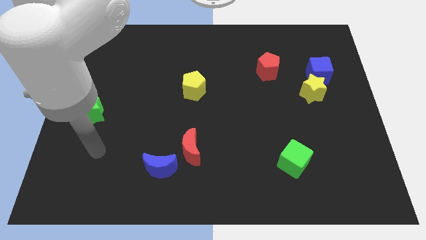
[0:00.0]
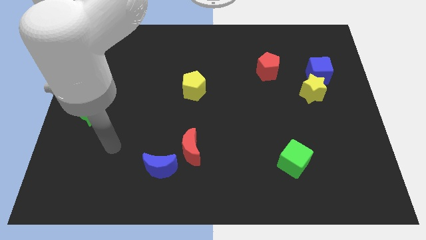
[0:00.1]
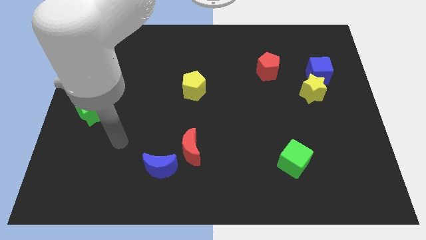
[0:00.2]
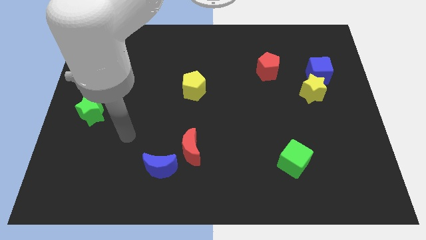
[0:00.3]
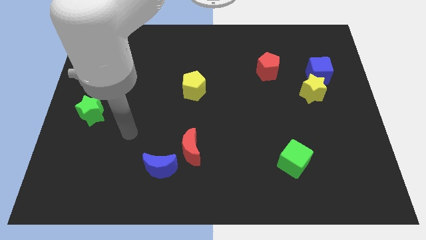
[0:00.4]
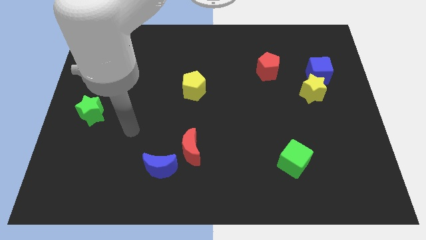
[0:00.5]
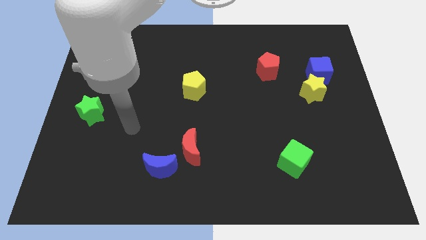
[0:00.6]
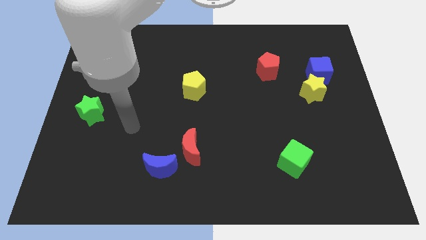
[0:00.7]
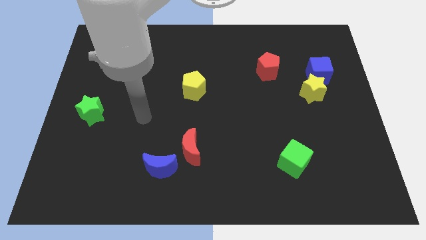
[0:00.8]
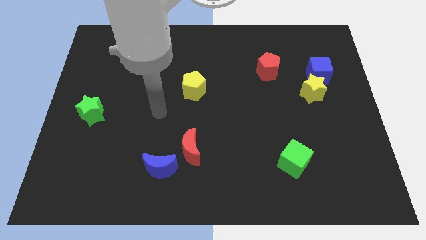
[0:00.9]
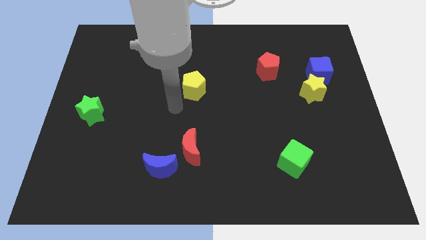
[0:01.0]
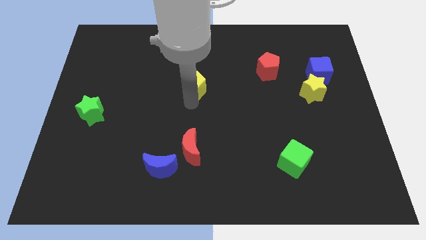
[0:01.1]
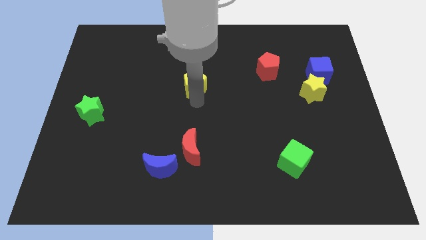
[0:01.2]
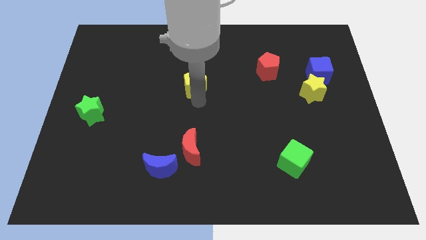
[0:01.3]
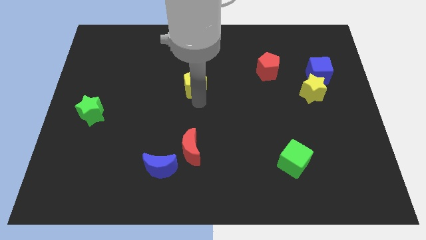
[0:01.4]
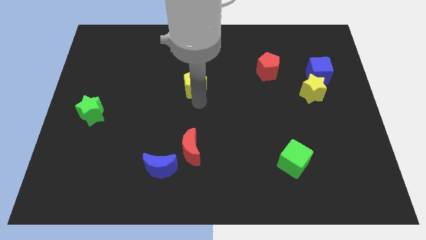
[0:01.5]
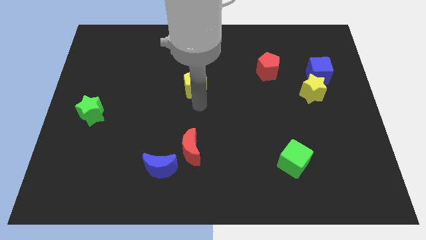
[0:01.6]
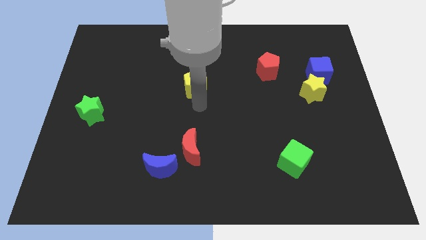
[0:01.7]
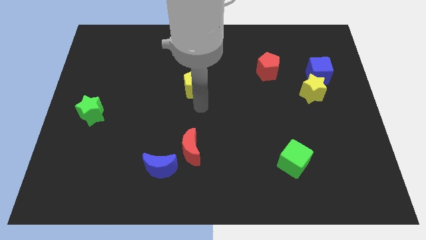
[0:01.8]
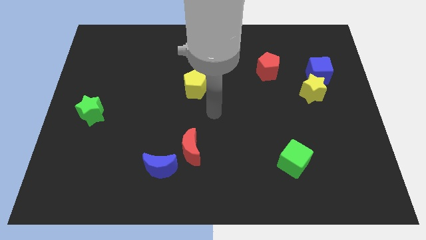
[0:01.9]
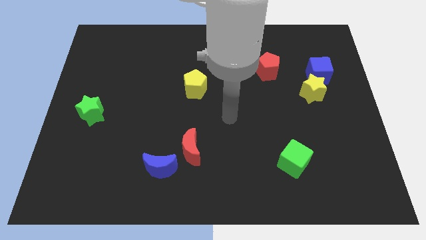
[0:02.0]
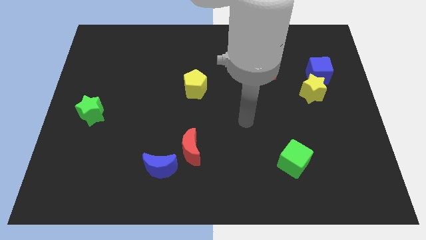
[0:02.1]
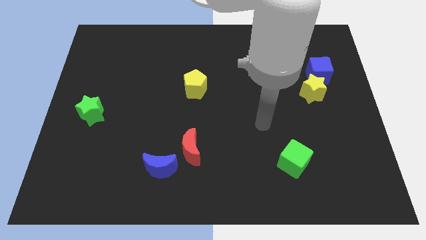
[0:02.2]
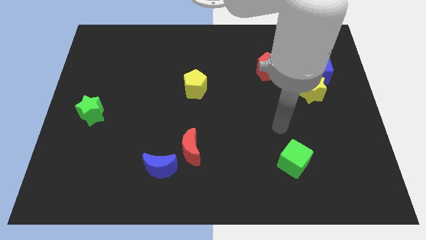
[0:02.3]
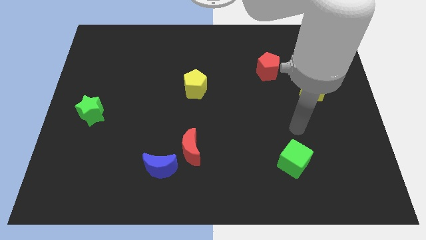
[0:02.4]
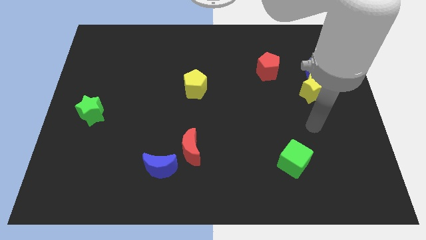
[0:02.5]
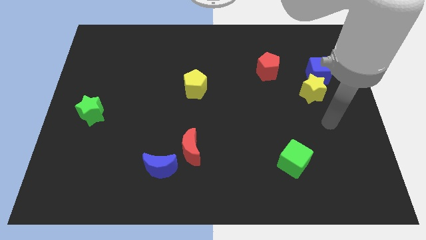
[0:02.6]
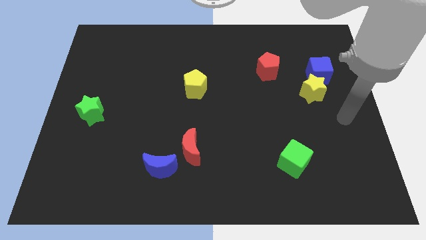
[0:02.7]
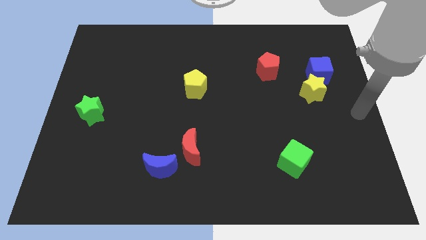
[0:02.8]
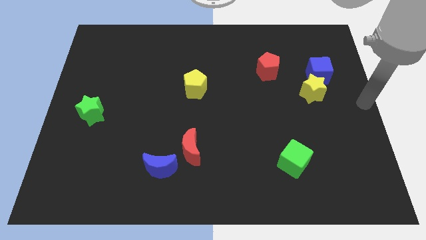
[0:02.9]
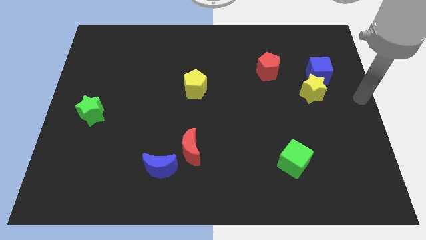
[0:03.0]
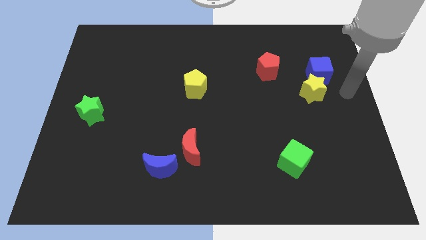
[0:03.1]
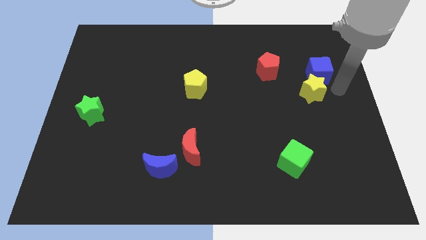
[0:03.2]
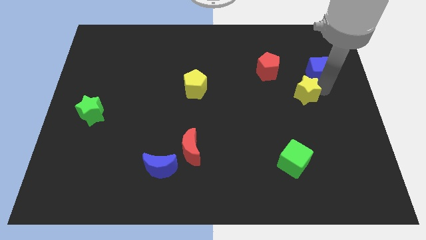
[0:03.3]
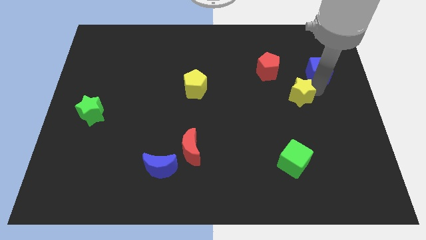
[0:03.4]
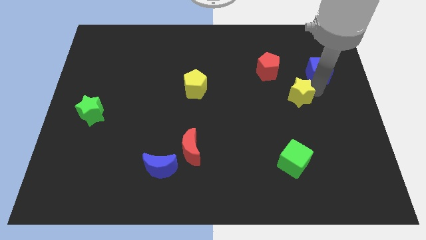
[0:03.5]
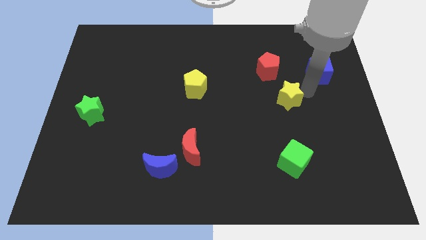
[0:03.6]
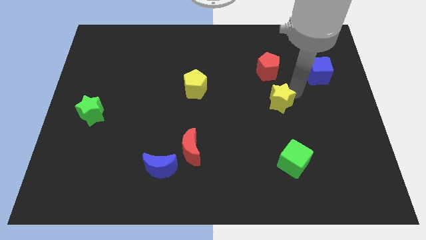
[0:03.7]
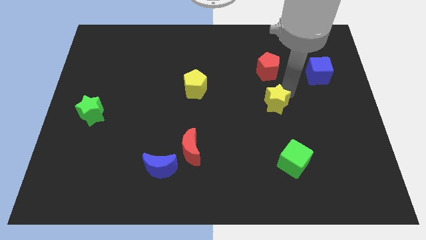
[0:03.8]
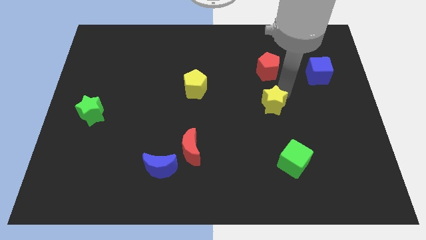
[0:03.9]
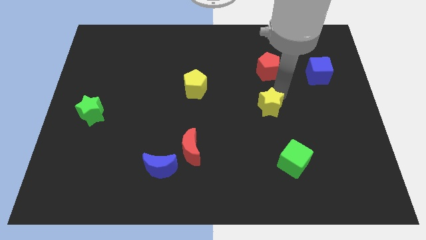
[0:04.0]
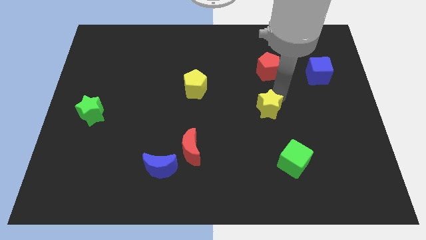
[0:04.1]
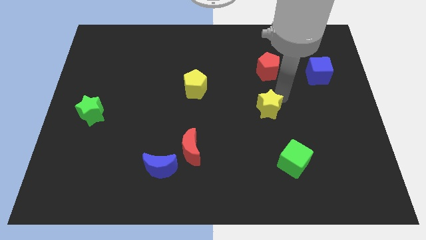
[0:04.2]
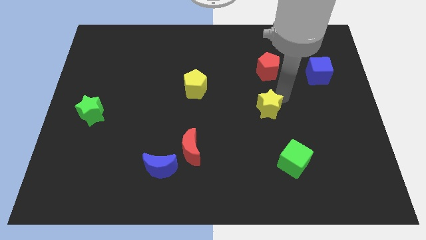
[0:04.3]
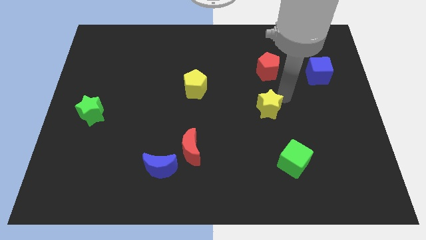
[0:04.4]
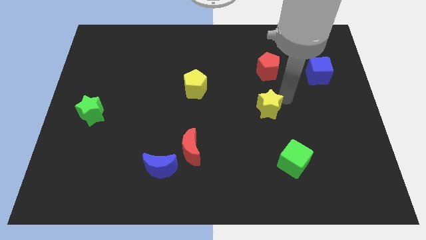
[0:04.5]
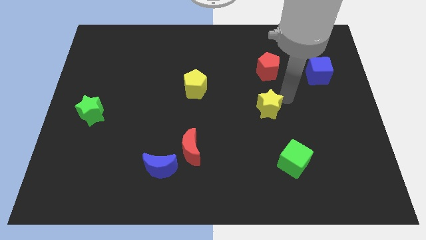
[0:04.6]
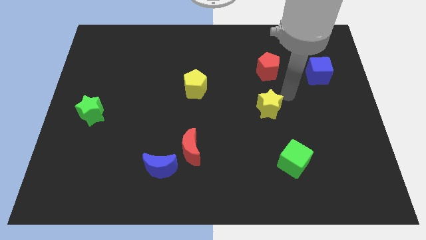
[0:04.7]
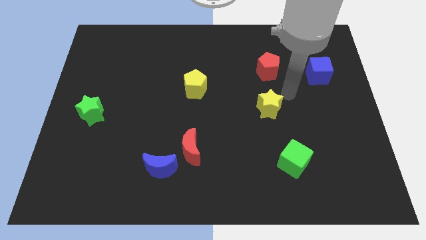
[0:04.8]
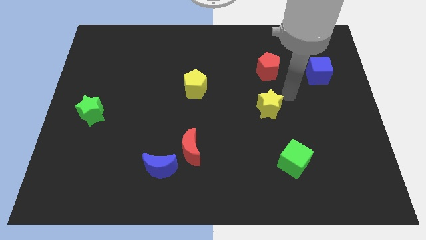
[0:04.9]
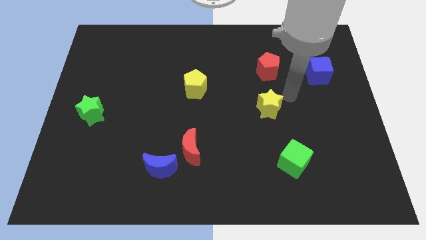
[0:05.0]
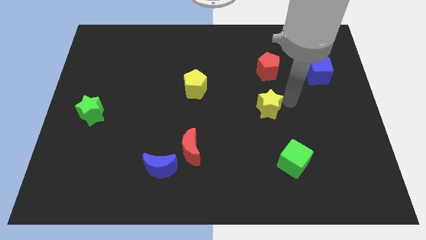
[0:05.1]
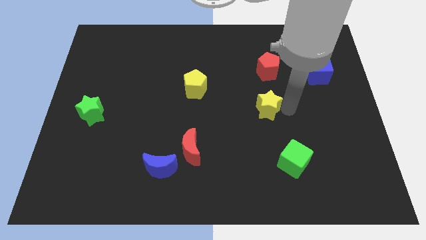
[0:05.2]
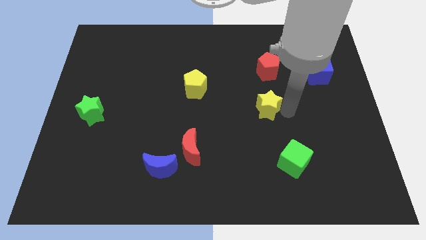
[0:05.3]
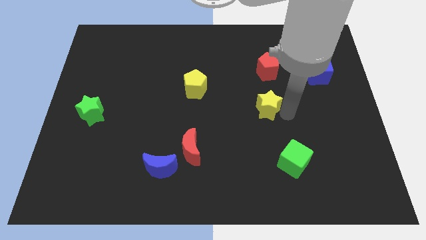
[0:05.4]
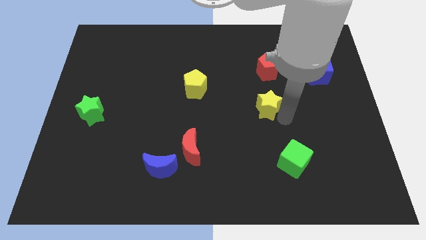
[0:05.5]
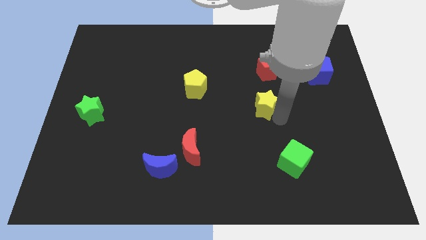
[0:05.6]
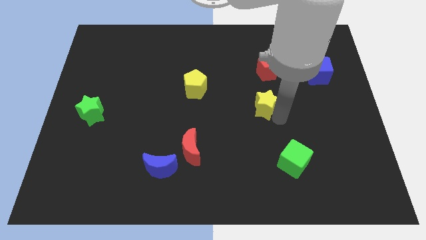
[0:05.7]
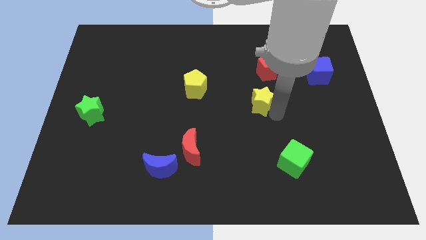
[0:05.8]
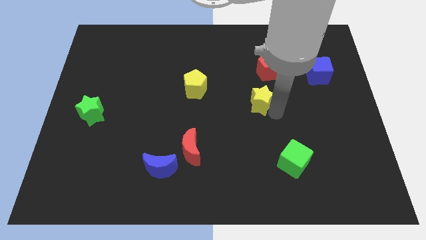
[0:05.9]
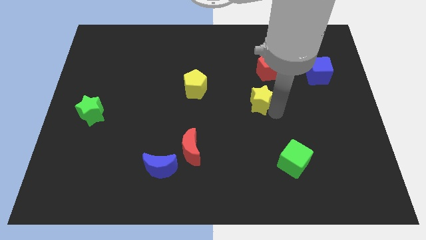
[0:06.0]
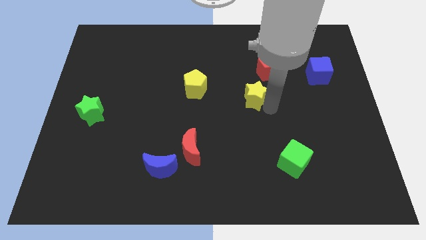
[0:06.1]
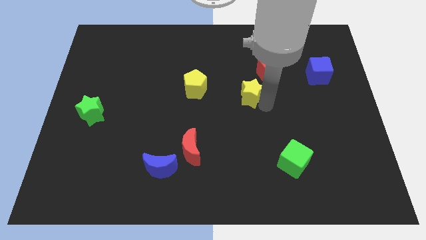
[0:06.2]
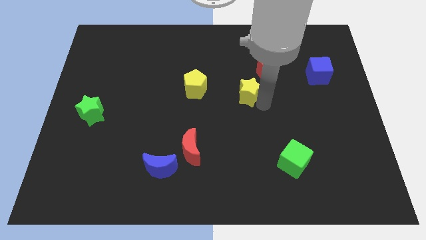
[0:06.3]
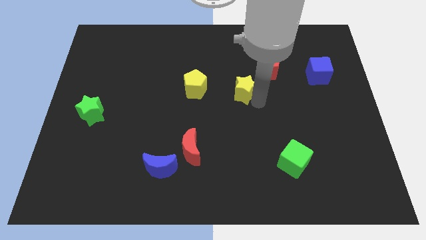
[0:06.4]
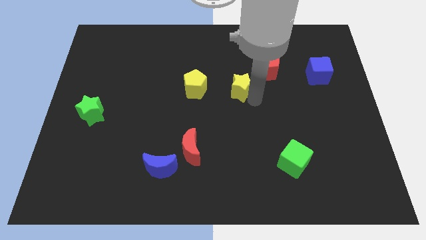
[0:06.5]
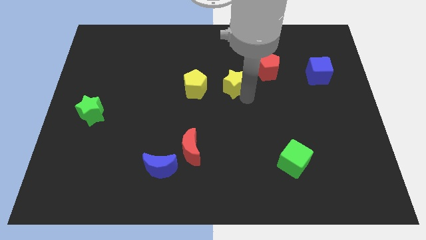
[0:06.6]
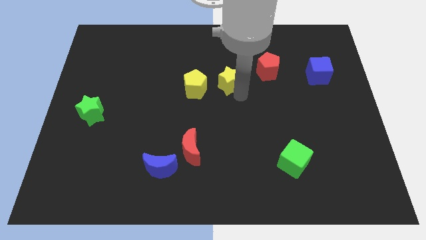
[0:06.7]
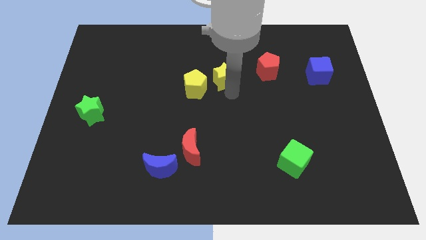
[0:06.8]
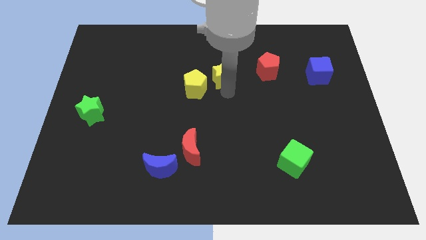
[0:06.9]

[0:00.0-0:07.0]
place the yellow star in between the red pentagon and yellow pentagon

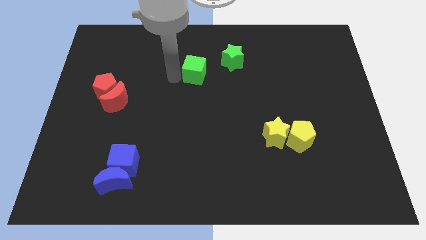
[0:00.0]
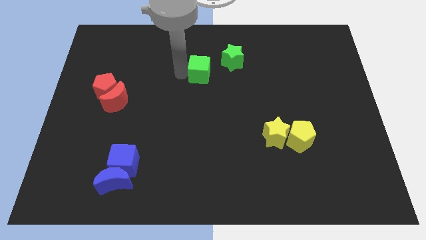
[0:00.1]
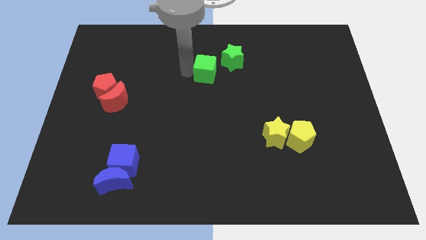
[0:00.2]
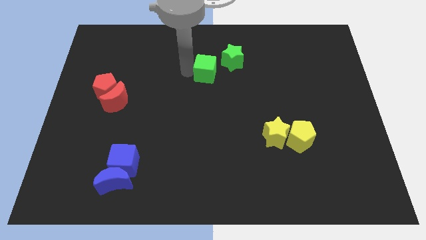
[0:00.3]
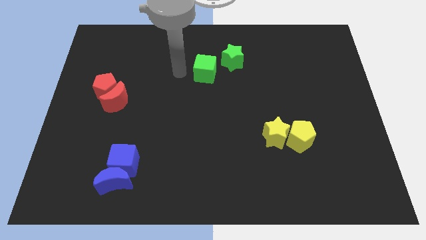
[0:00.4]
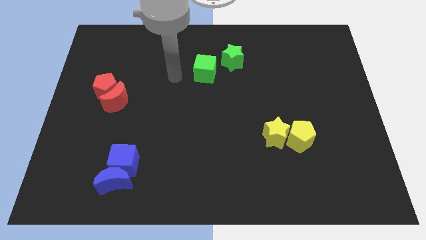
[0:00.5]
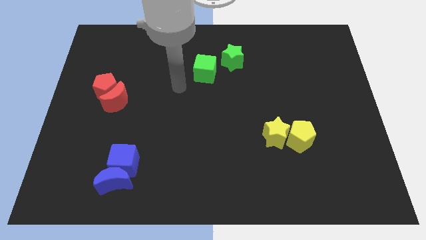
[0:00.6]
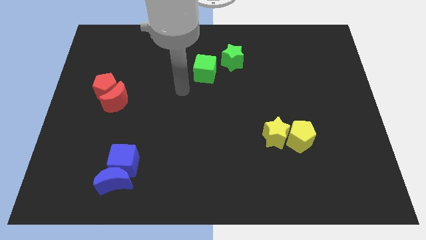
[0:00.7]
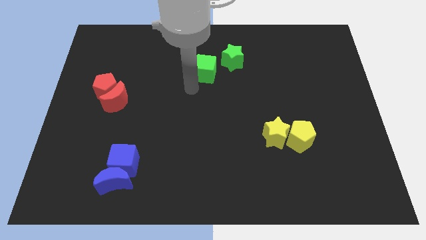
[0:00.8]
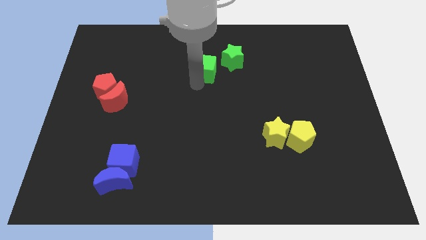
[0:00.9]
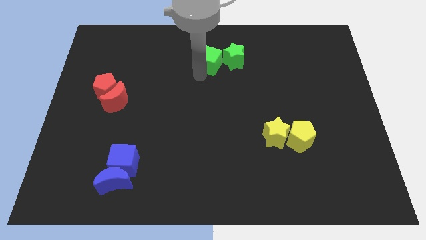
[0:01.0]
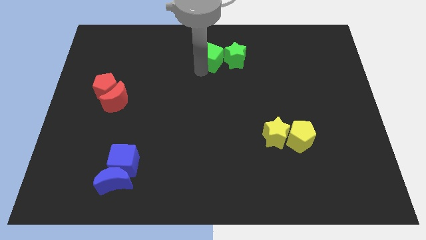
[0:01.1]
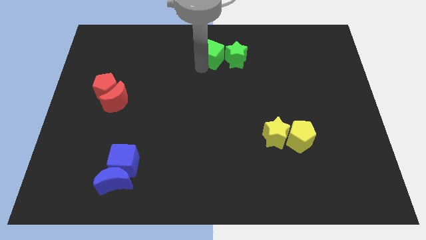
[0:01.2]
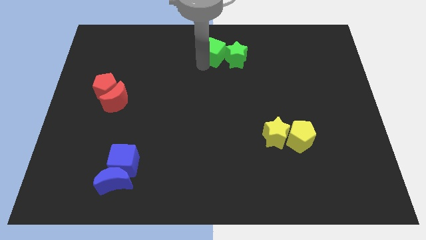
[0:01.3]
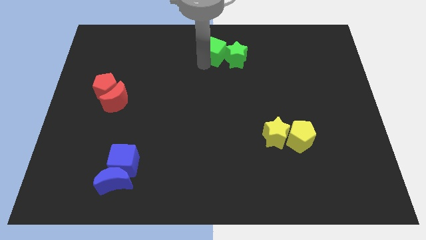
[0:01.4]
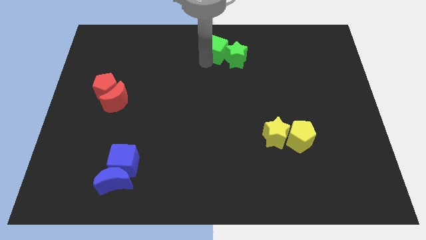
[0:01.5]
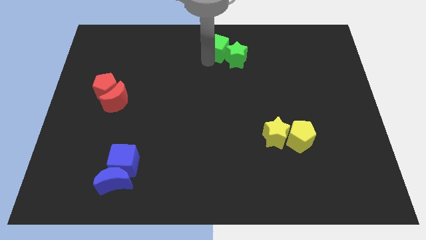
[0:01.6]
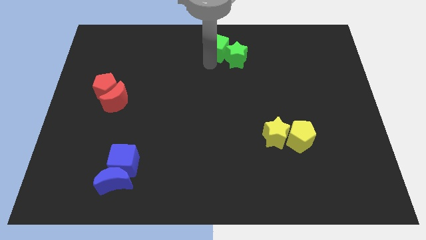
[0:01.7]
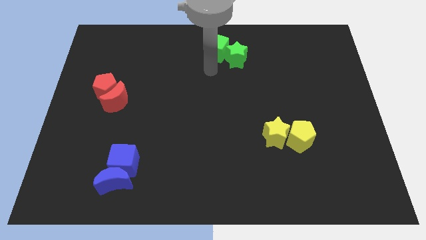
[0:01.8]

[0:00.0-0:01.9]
place green cube beside the green star
